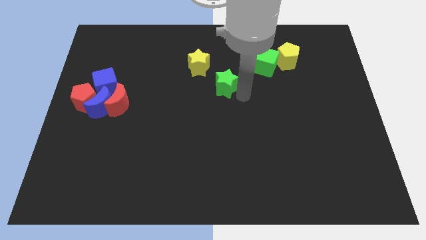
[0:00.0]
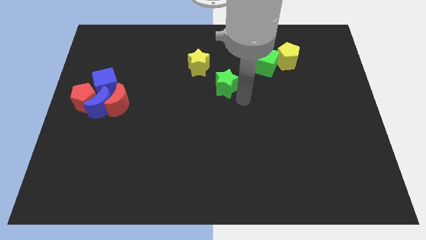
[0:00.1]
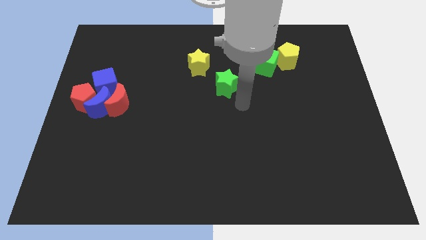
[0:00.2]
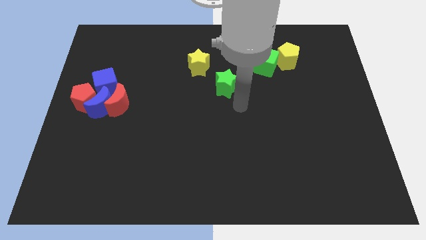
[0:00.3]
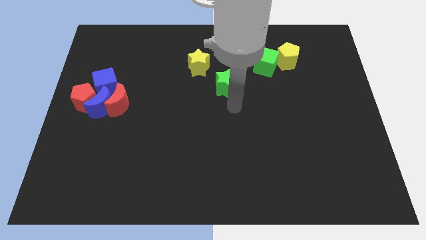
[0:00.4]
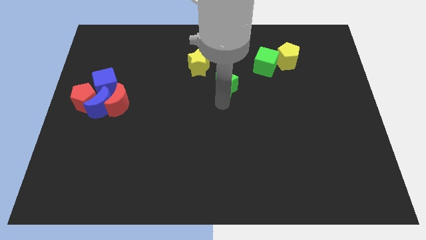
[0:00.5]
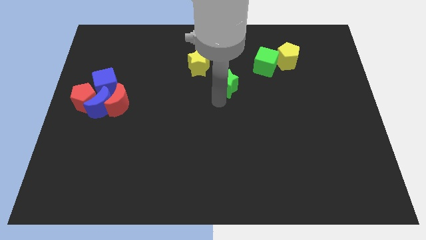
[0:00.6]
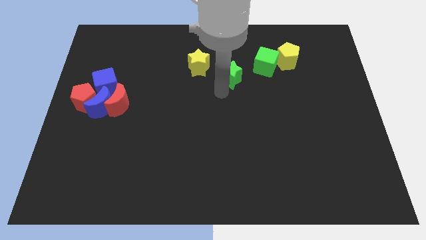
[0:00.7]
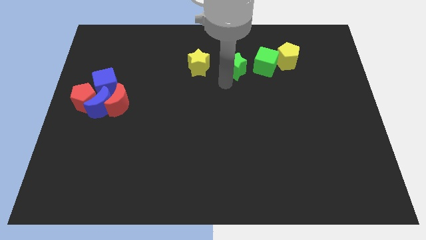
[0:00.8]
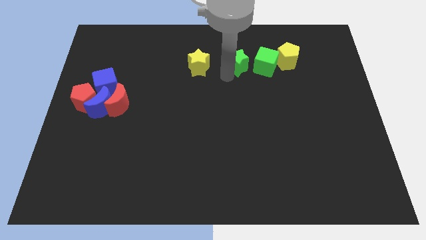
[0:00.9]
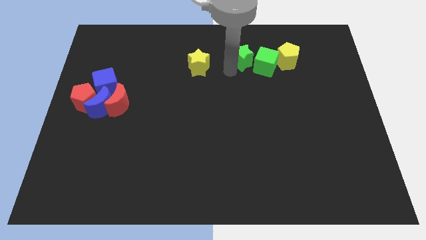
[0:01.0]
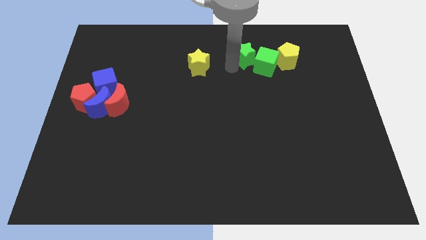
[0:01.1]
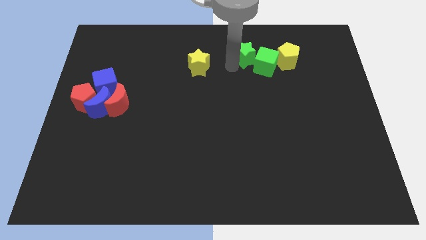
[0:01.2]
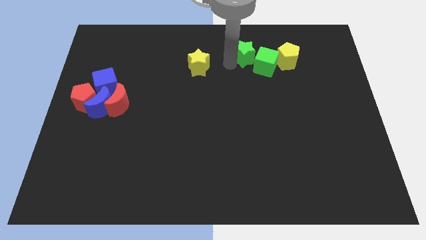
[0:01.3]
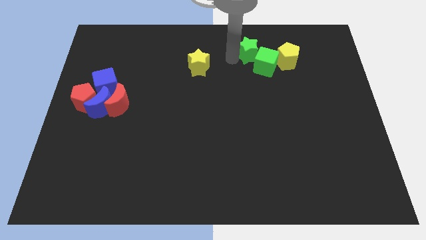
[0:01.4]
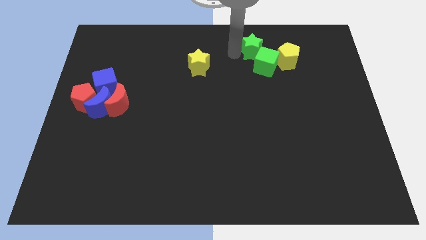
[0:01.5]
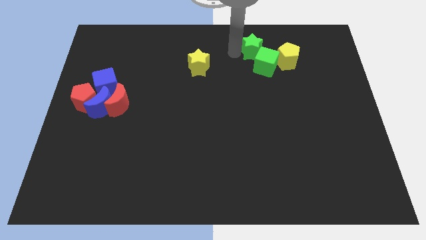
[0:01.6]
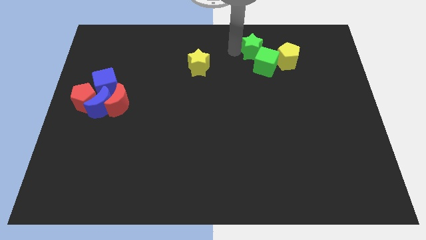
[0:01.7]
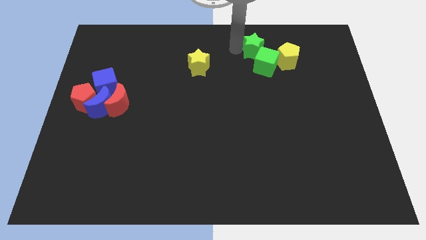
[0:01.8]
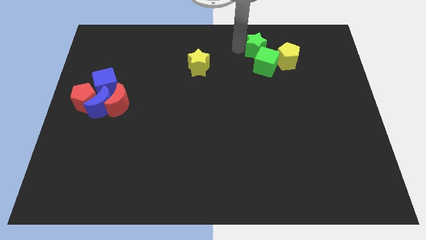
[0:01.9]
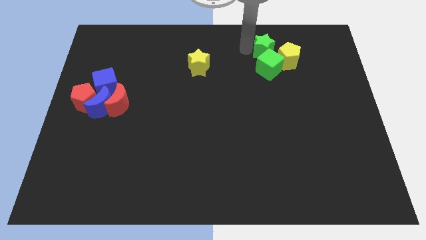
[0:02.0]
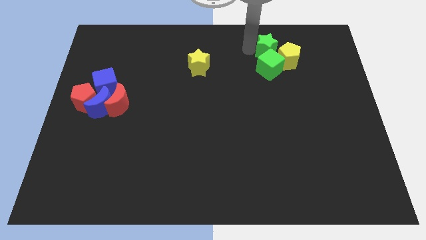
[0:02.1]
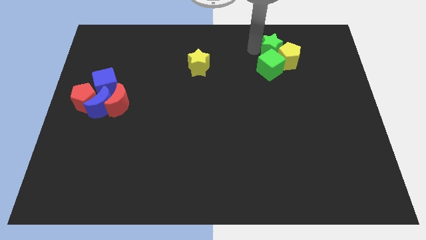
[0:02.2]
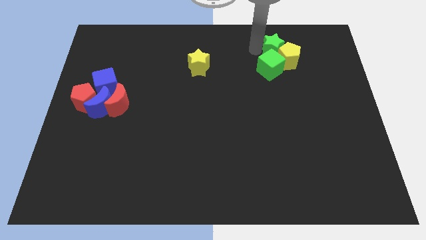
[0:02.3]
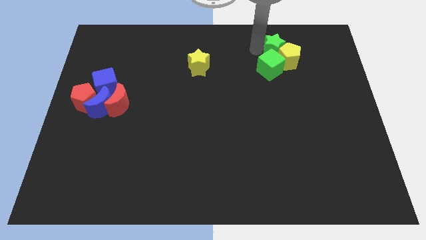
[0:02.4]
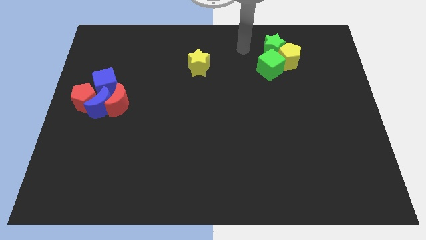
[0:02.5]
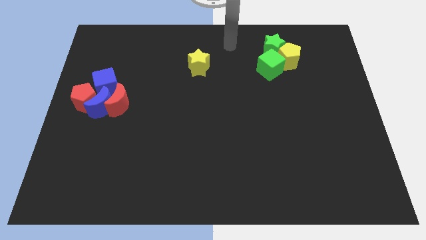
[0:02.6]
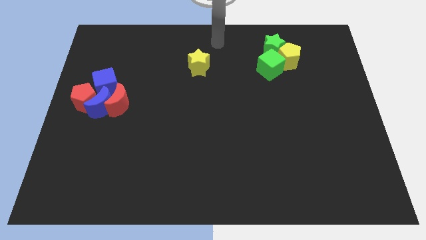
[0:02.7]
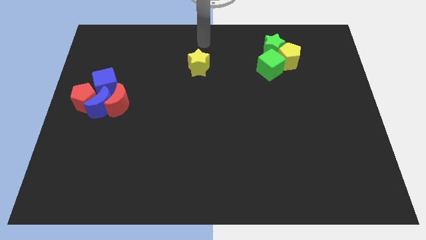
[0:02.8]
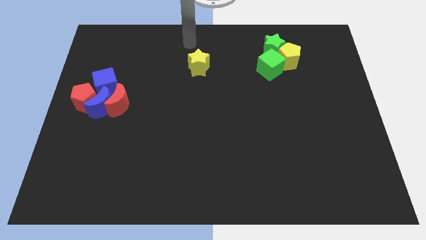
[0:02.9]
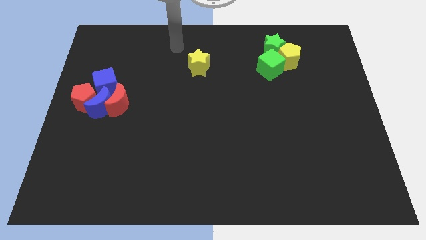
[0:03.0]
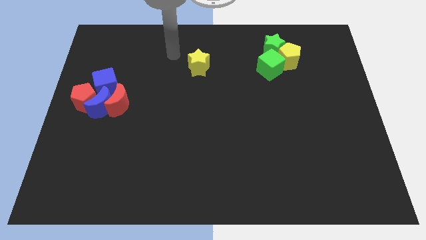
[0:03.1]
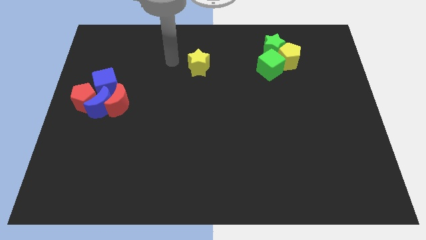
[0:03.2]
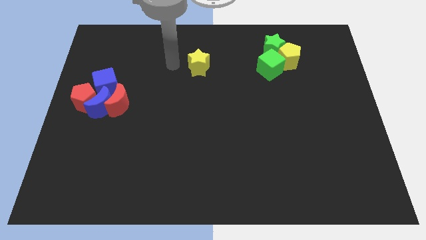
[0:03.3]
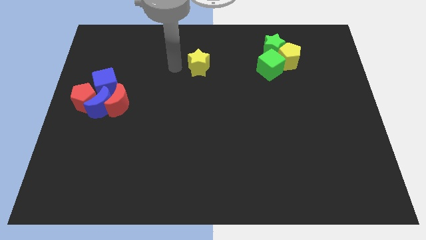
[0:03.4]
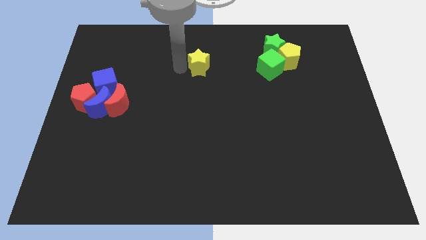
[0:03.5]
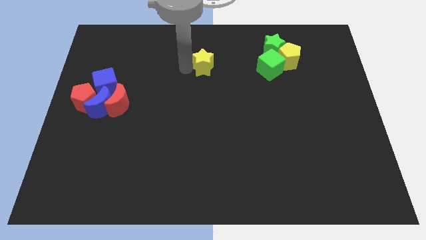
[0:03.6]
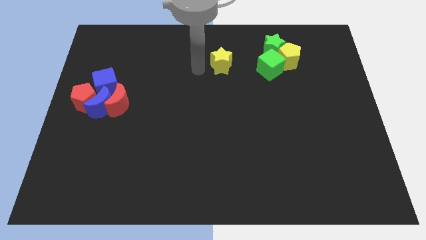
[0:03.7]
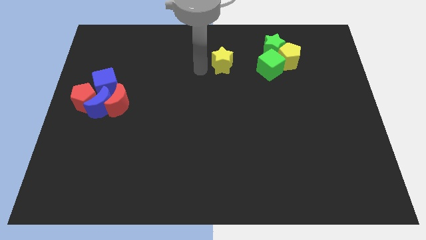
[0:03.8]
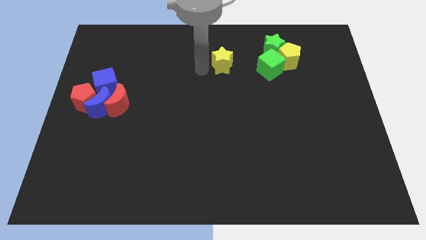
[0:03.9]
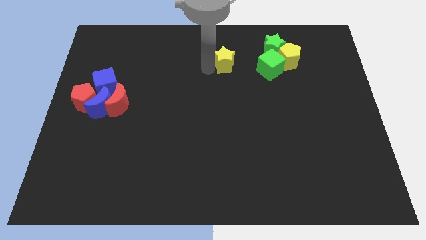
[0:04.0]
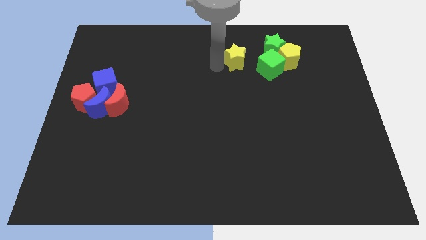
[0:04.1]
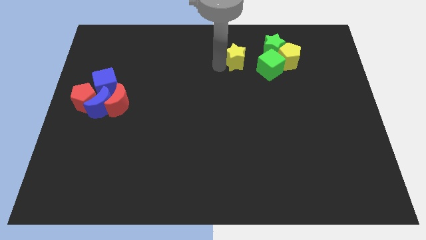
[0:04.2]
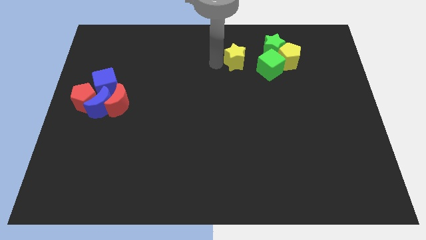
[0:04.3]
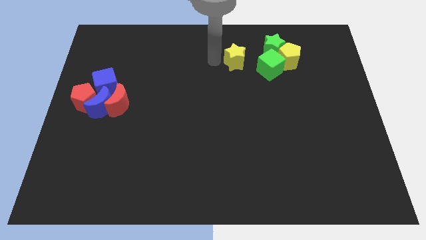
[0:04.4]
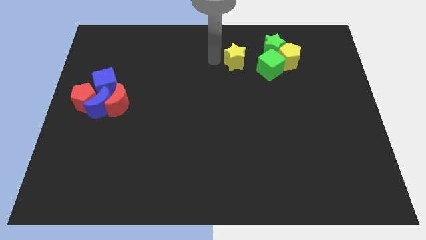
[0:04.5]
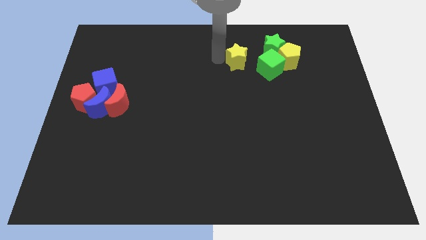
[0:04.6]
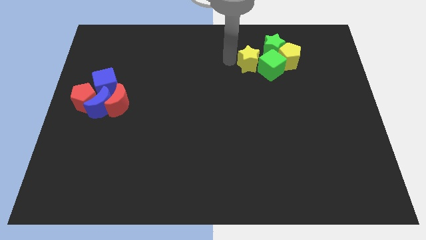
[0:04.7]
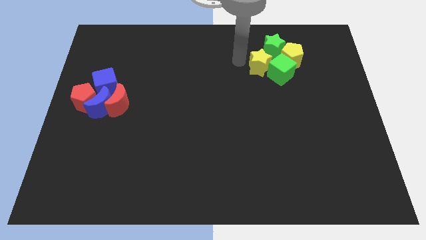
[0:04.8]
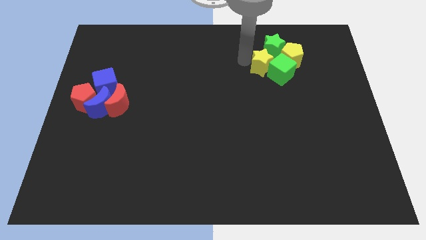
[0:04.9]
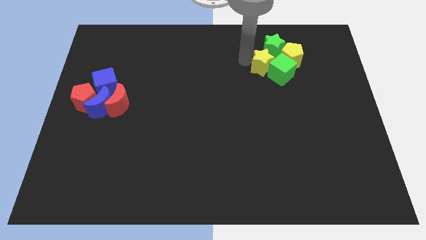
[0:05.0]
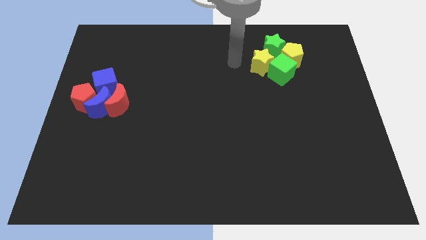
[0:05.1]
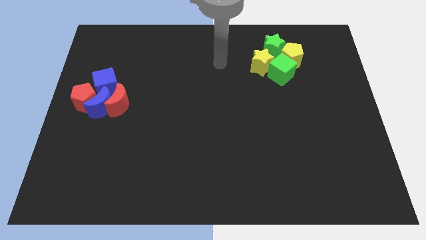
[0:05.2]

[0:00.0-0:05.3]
move the green star into the yellow pentagon

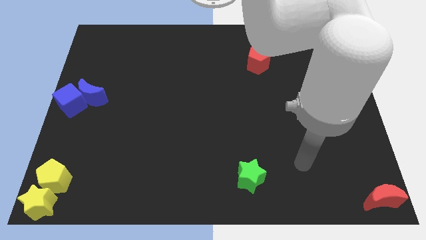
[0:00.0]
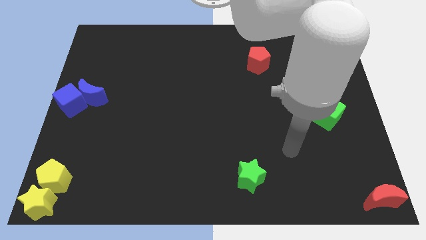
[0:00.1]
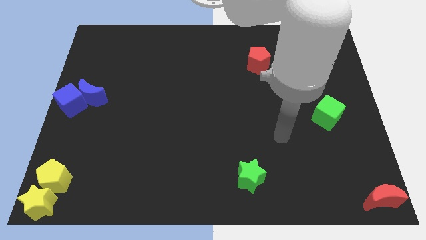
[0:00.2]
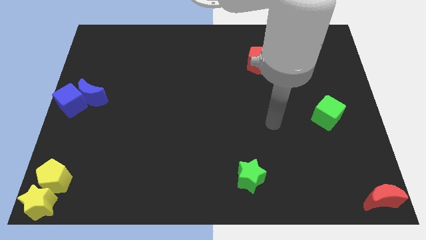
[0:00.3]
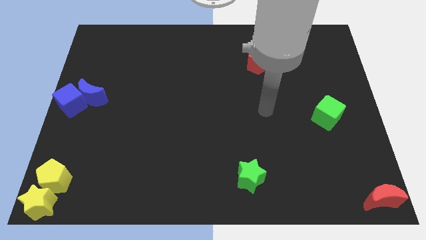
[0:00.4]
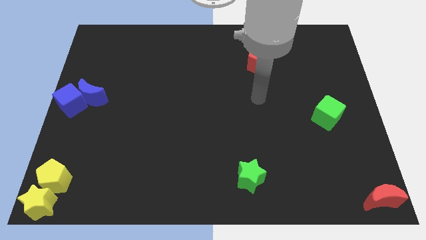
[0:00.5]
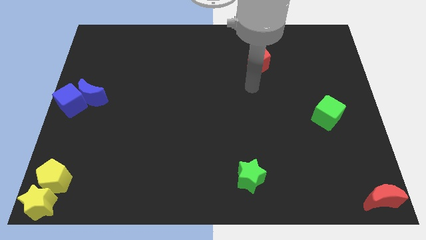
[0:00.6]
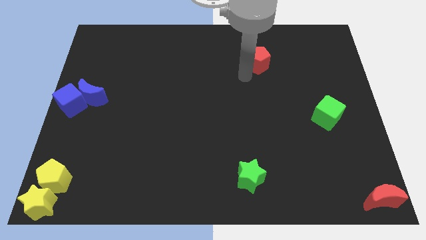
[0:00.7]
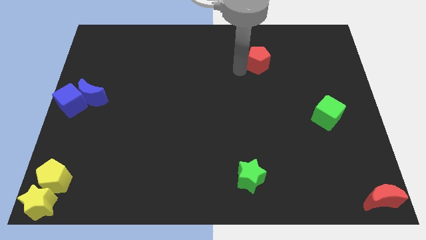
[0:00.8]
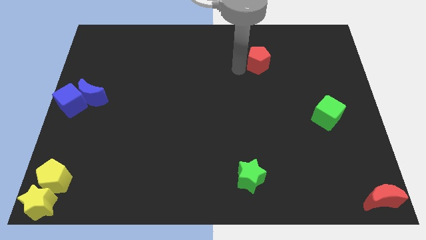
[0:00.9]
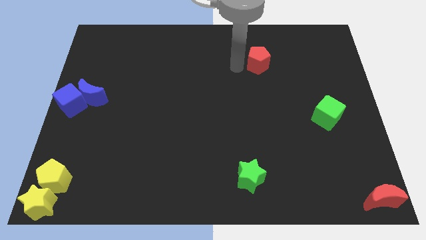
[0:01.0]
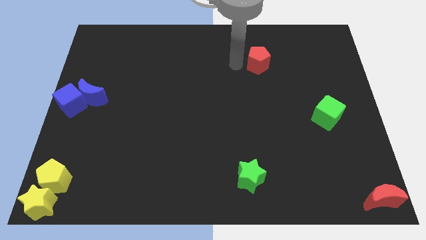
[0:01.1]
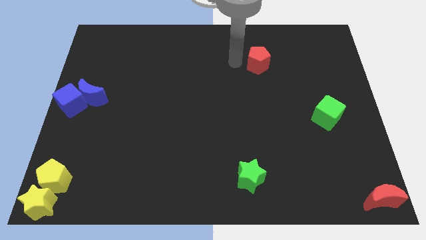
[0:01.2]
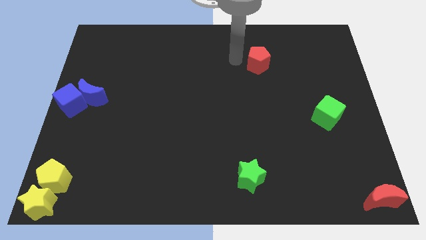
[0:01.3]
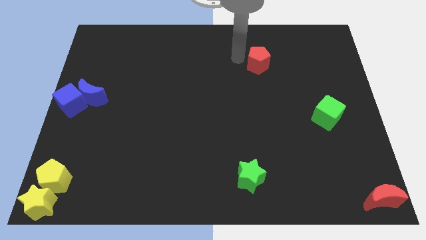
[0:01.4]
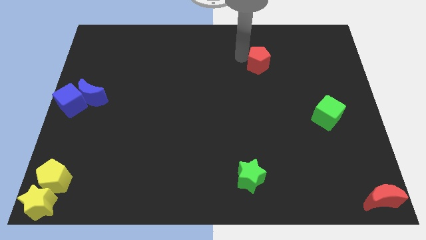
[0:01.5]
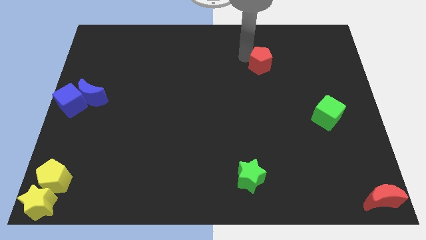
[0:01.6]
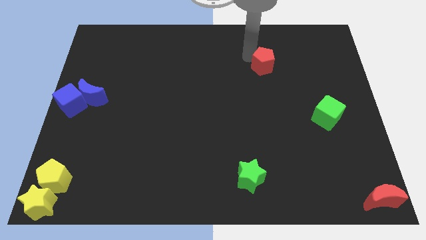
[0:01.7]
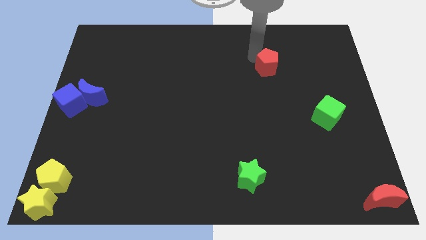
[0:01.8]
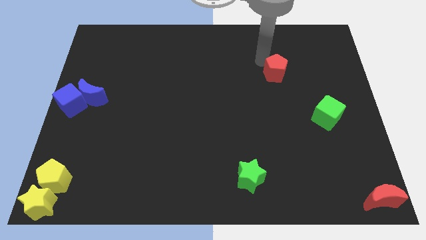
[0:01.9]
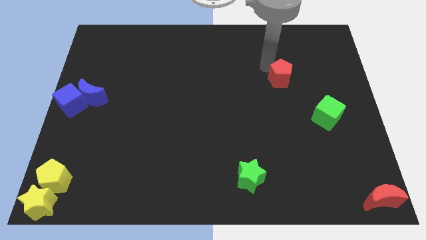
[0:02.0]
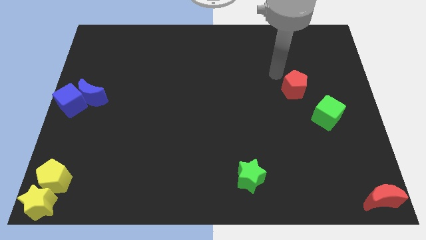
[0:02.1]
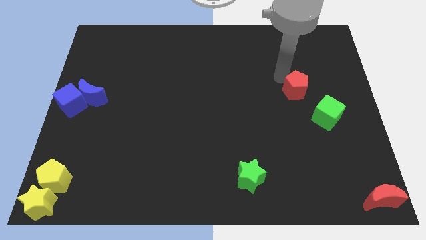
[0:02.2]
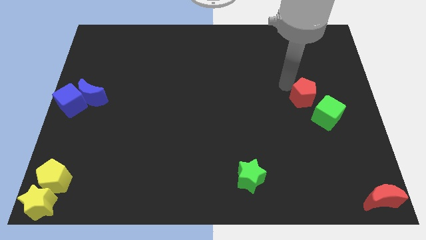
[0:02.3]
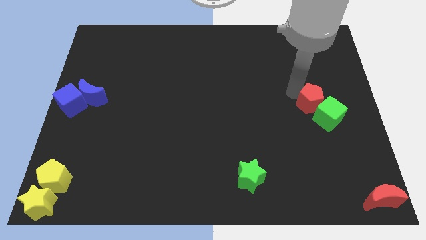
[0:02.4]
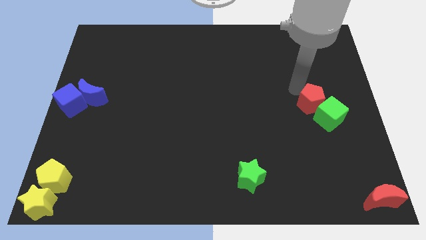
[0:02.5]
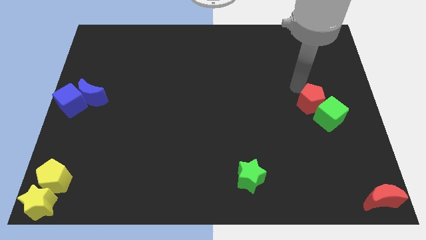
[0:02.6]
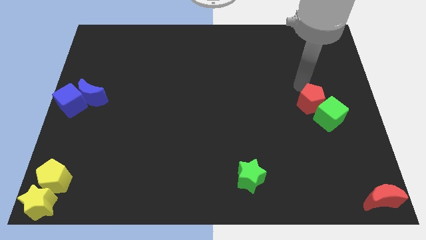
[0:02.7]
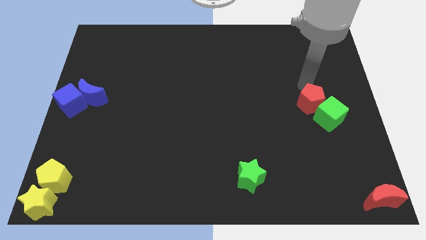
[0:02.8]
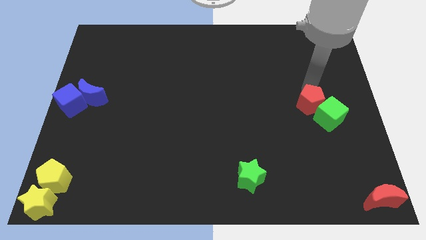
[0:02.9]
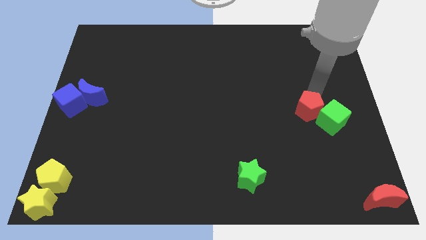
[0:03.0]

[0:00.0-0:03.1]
push the red pentagon into the green cube

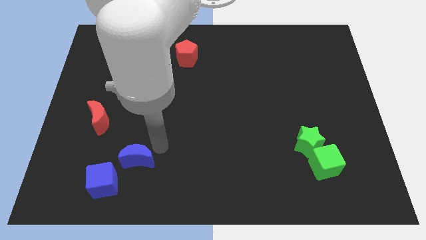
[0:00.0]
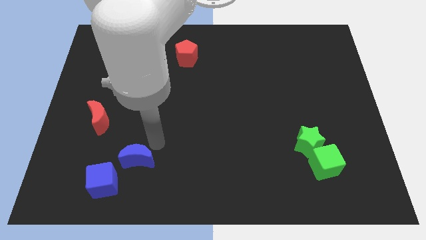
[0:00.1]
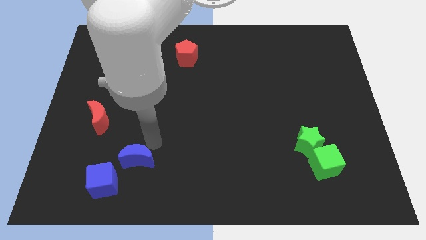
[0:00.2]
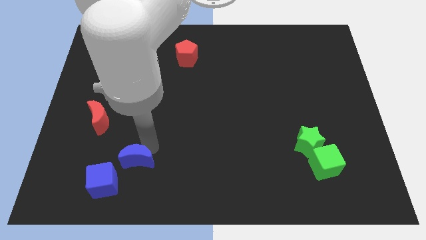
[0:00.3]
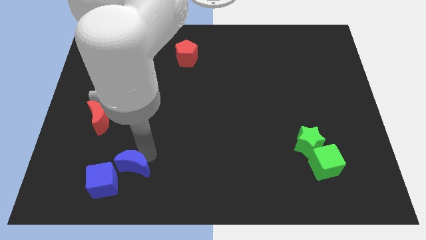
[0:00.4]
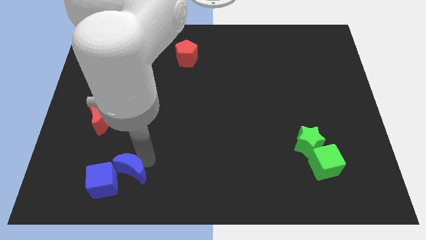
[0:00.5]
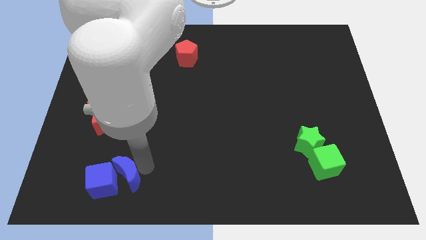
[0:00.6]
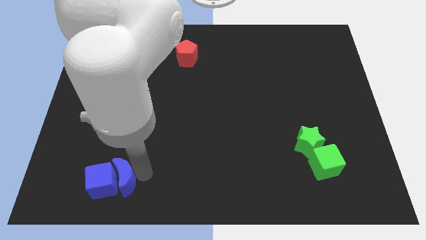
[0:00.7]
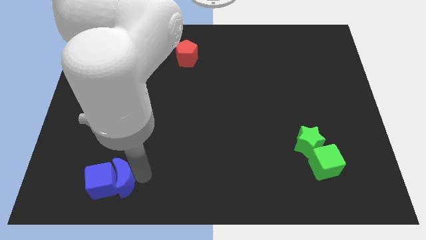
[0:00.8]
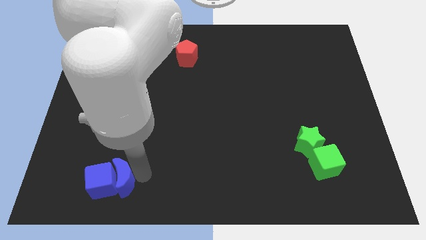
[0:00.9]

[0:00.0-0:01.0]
push blue moon into blue cube
